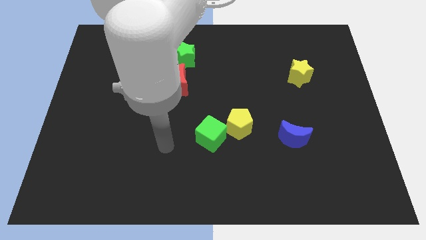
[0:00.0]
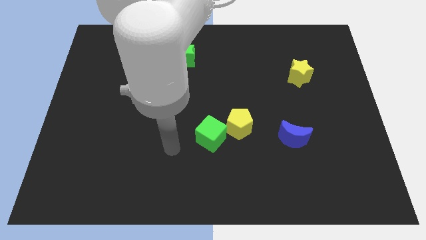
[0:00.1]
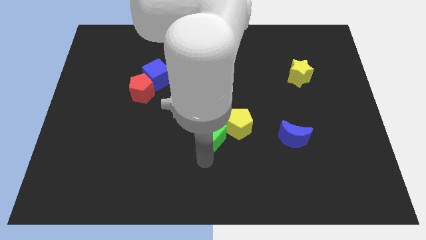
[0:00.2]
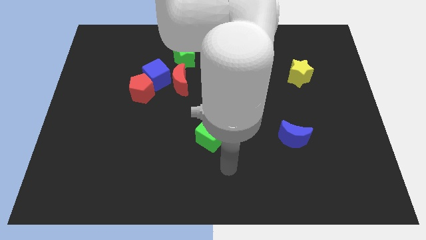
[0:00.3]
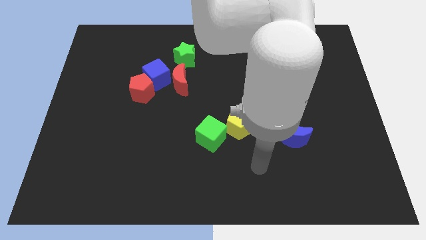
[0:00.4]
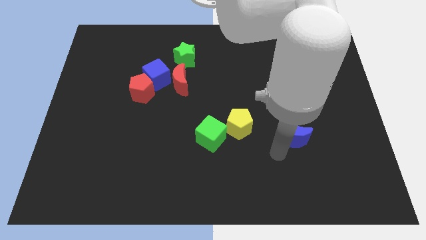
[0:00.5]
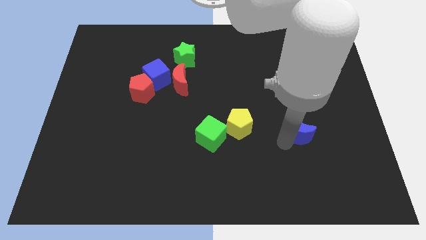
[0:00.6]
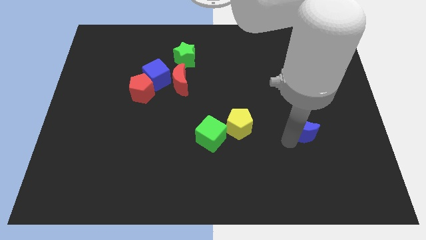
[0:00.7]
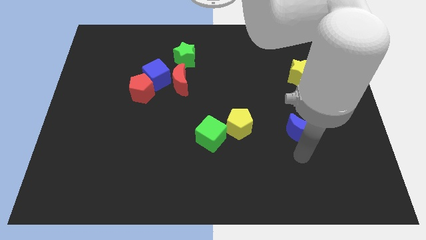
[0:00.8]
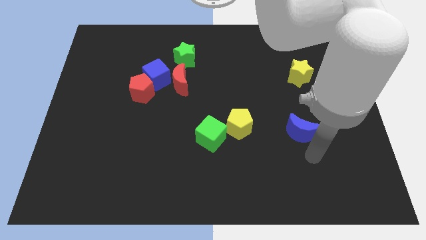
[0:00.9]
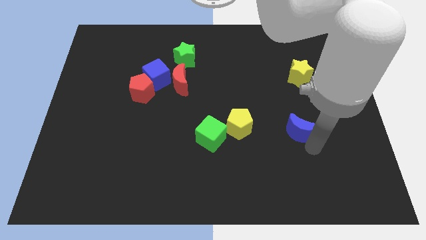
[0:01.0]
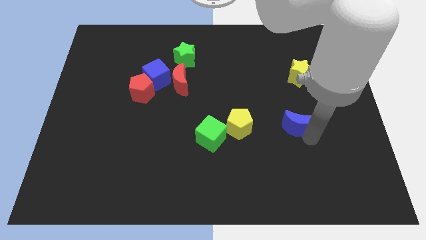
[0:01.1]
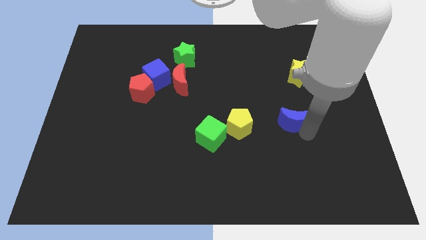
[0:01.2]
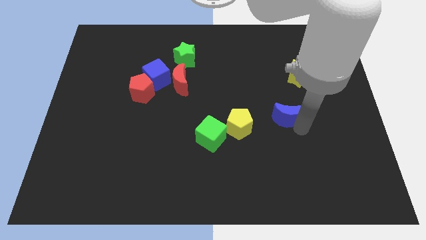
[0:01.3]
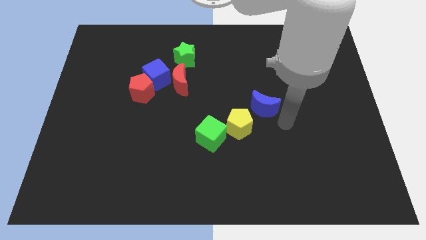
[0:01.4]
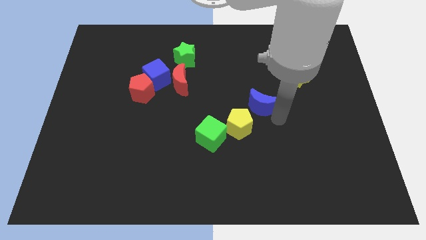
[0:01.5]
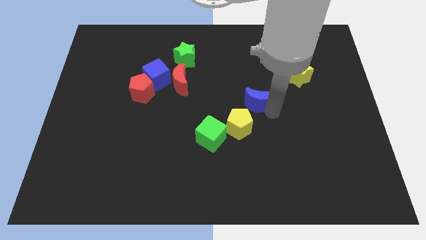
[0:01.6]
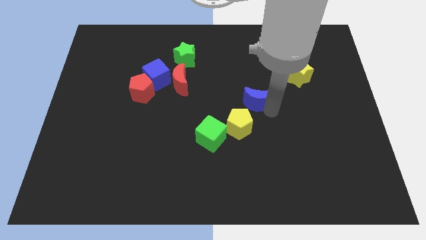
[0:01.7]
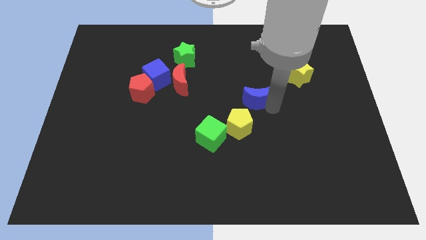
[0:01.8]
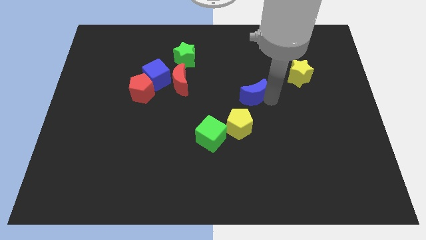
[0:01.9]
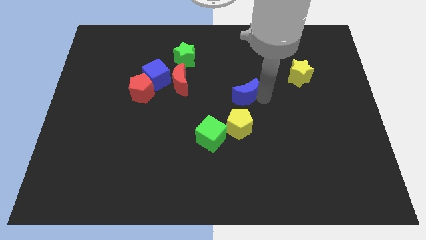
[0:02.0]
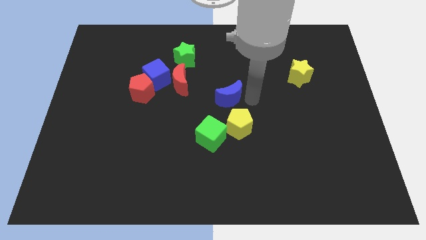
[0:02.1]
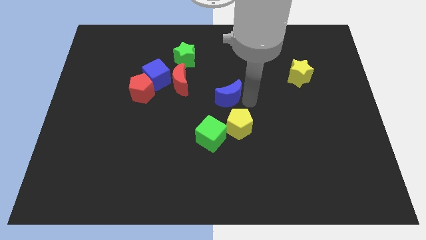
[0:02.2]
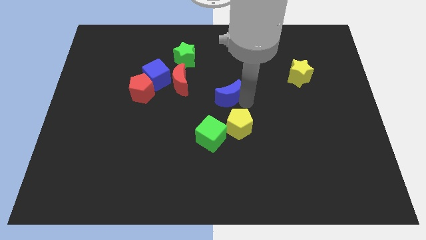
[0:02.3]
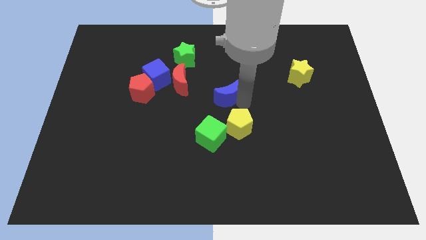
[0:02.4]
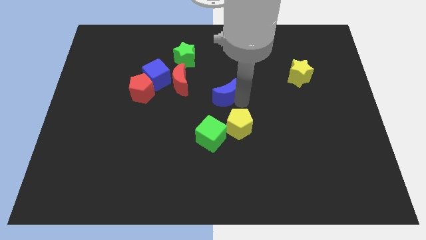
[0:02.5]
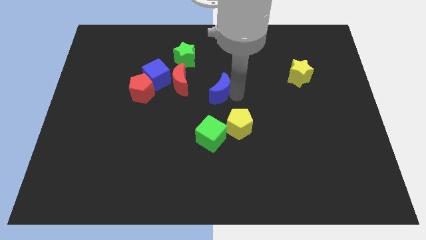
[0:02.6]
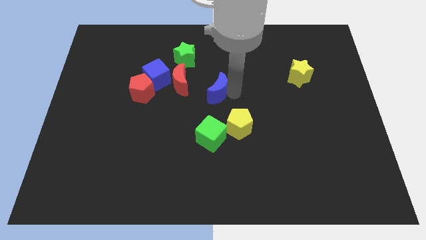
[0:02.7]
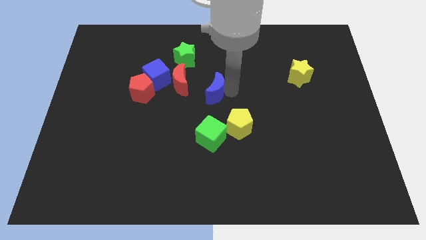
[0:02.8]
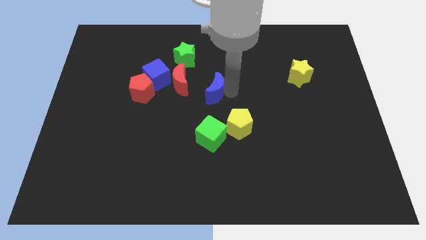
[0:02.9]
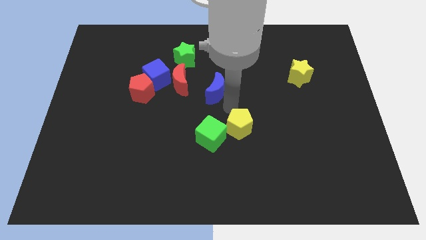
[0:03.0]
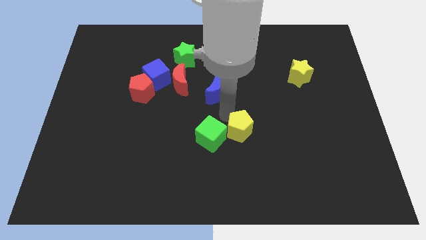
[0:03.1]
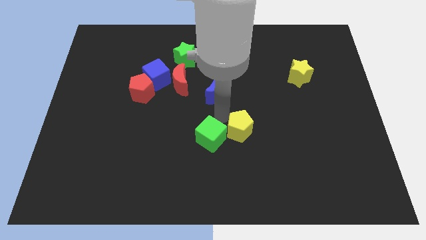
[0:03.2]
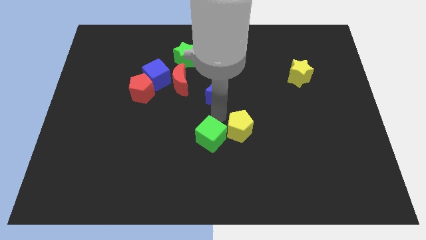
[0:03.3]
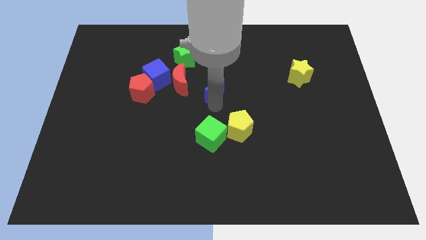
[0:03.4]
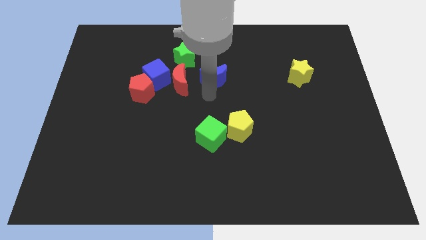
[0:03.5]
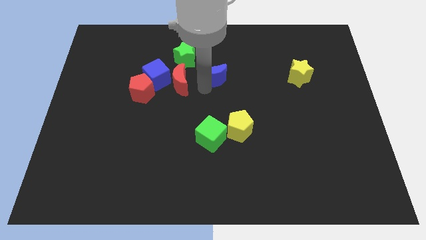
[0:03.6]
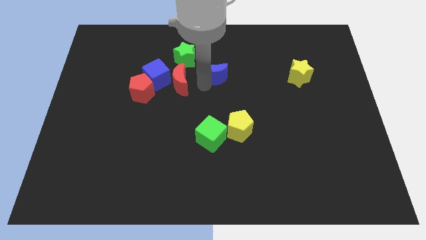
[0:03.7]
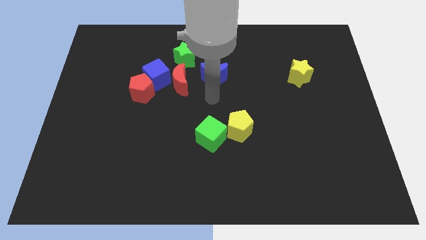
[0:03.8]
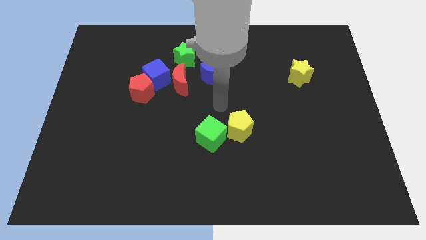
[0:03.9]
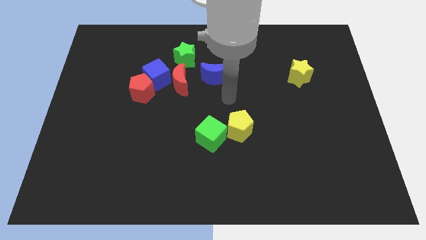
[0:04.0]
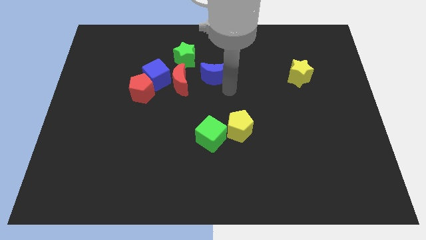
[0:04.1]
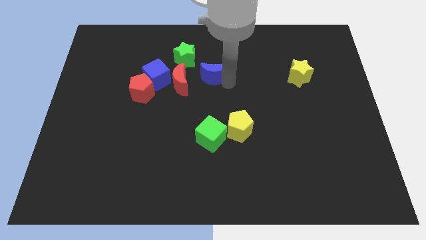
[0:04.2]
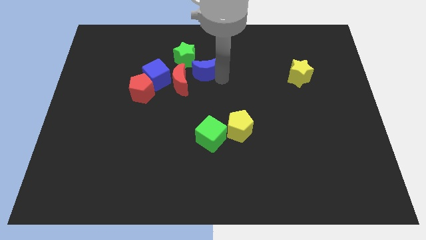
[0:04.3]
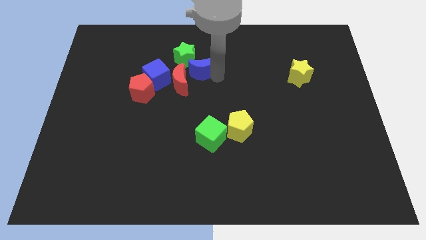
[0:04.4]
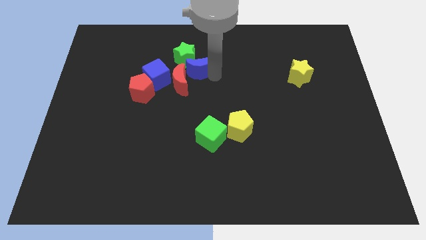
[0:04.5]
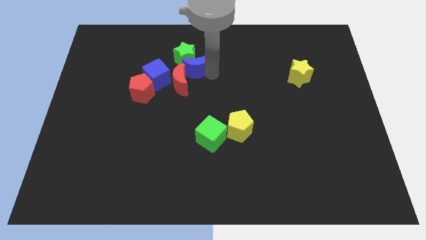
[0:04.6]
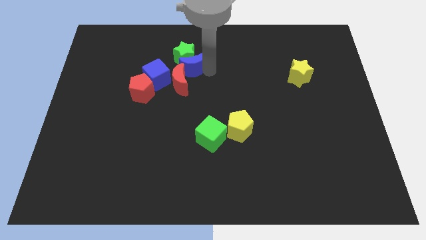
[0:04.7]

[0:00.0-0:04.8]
push the blue moon next to the green star

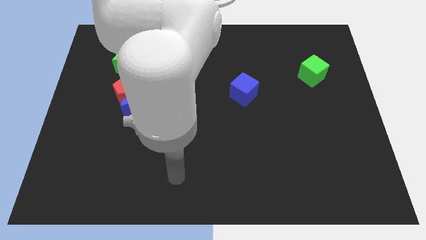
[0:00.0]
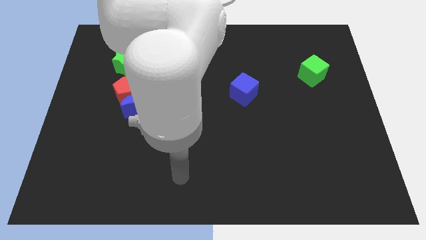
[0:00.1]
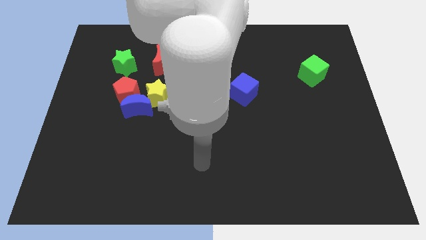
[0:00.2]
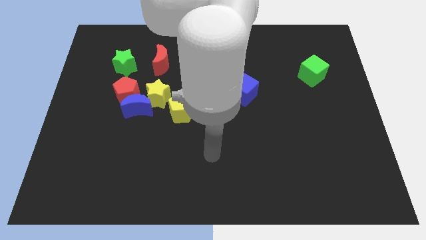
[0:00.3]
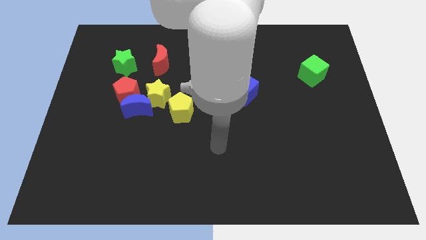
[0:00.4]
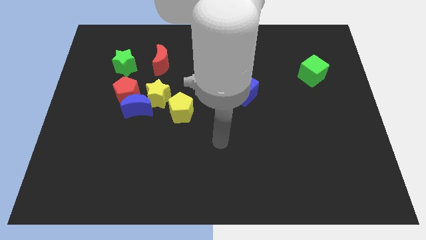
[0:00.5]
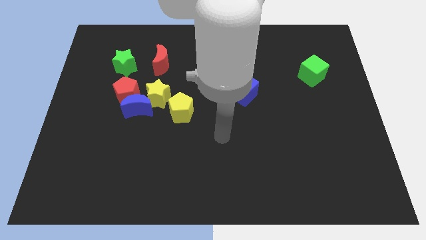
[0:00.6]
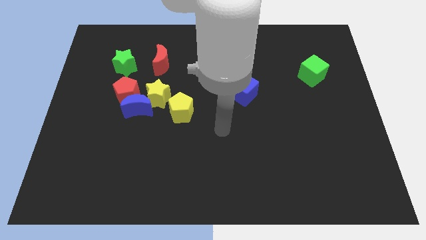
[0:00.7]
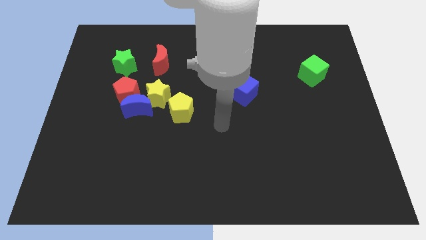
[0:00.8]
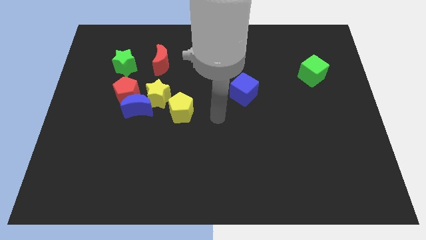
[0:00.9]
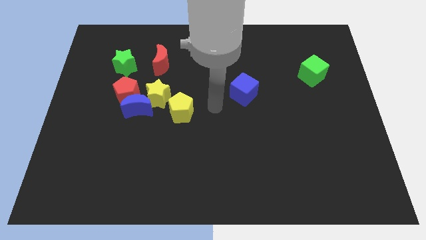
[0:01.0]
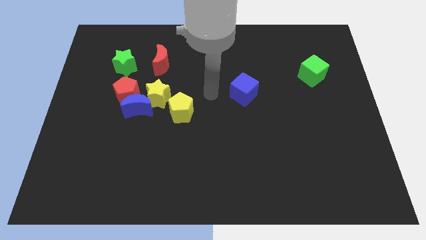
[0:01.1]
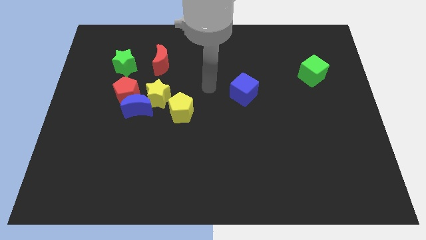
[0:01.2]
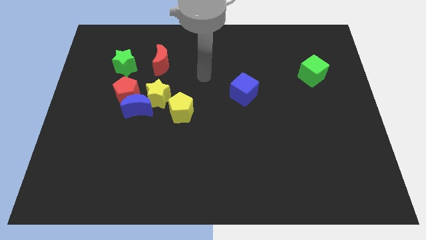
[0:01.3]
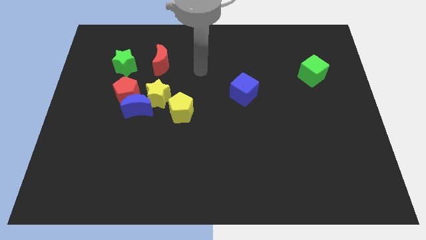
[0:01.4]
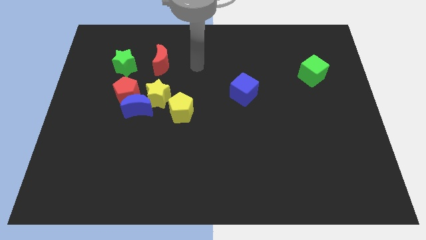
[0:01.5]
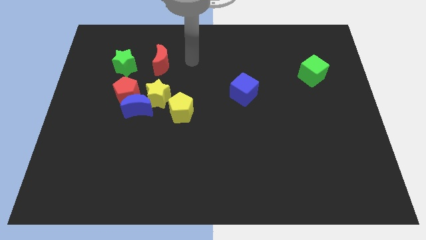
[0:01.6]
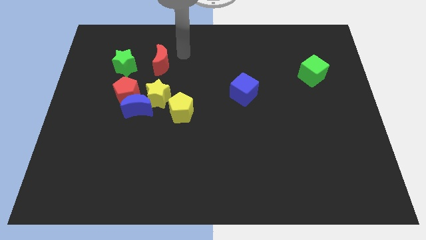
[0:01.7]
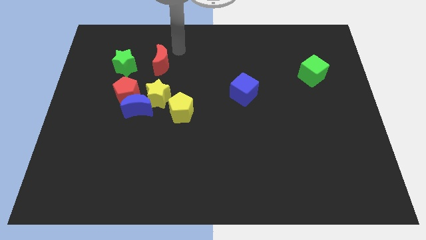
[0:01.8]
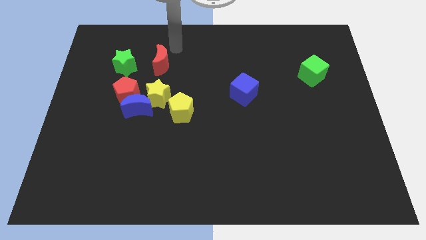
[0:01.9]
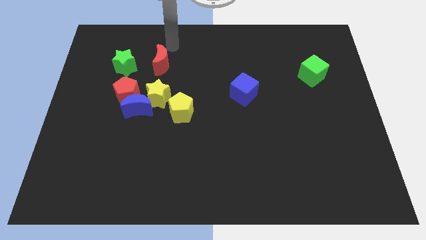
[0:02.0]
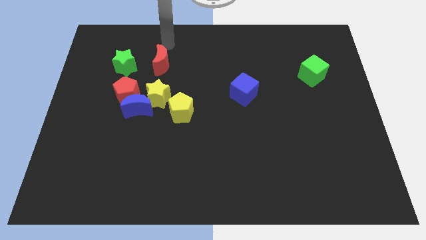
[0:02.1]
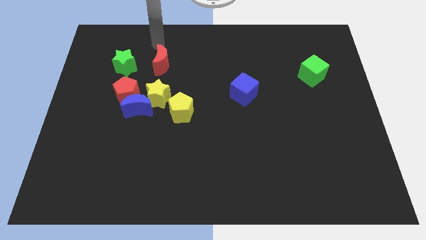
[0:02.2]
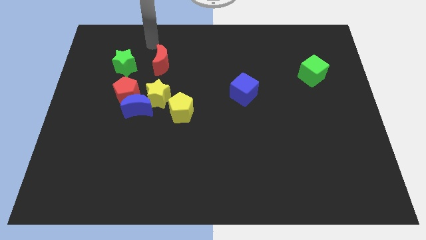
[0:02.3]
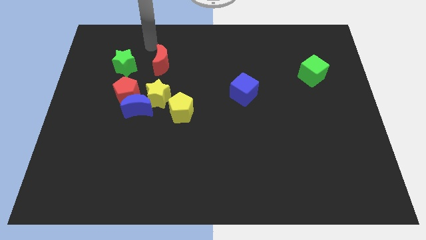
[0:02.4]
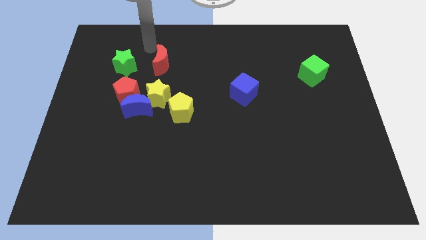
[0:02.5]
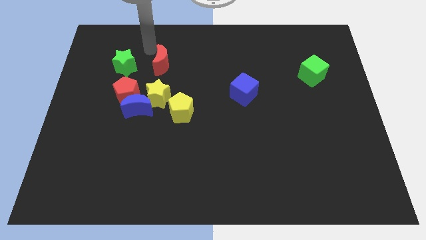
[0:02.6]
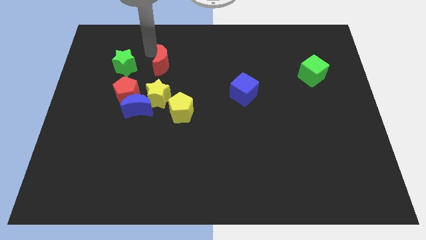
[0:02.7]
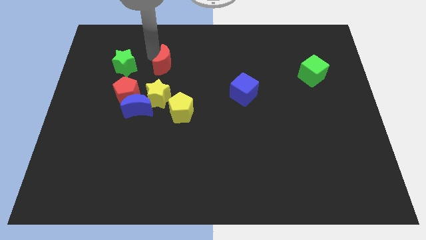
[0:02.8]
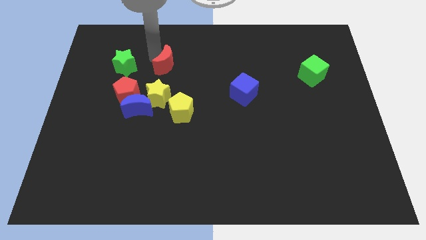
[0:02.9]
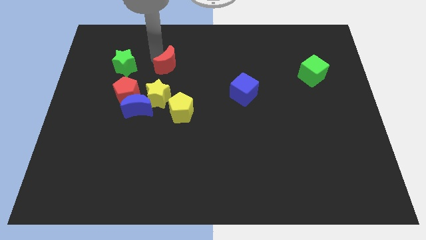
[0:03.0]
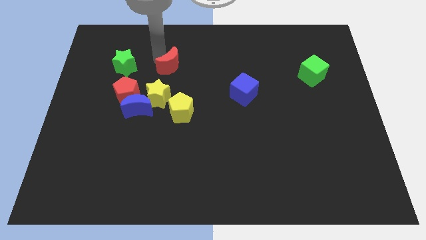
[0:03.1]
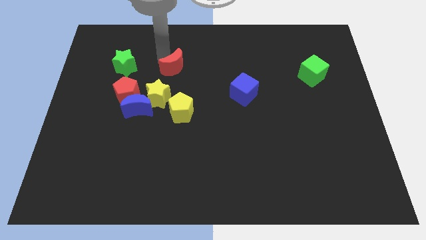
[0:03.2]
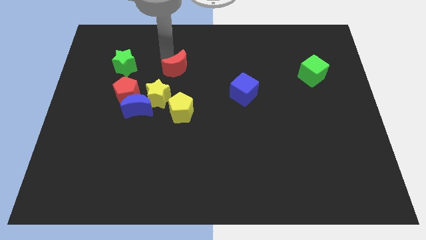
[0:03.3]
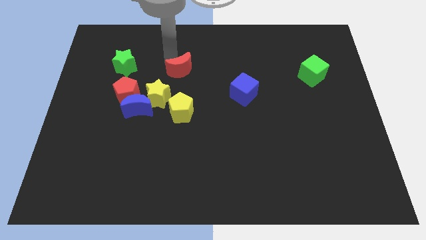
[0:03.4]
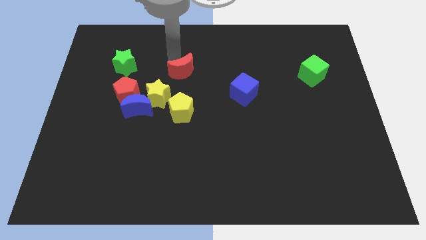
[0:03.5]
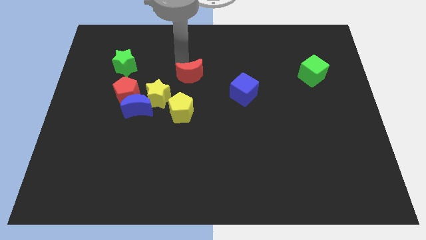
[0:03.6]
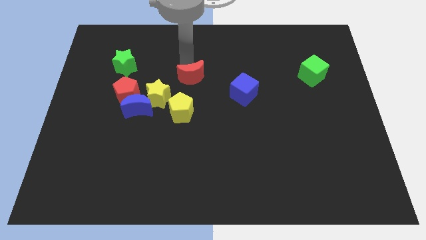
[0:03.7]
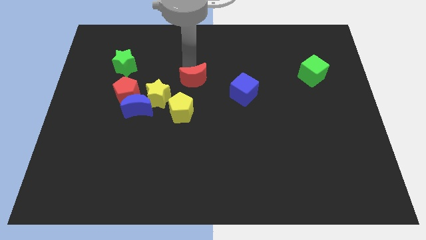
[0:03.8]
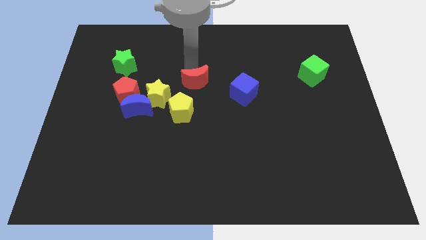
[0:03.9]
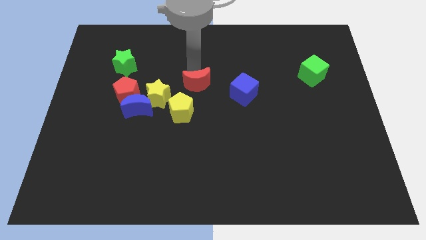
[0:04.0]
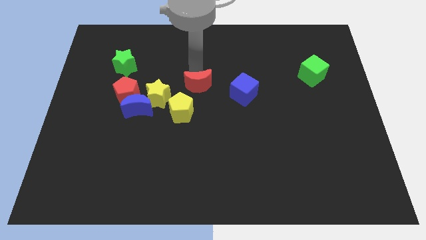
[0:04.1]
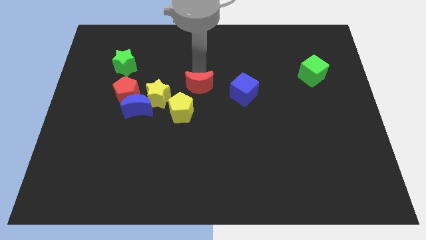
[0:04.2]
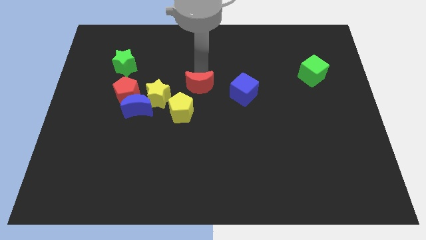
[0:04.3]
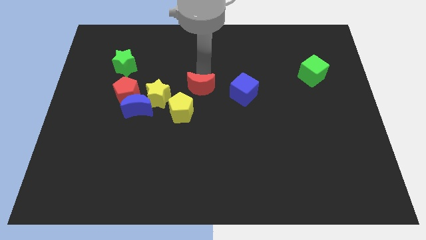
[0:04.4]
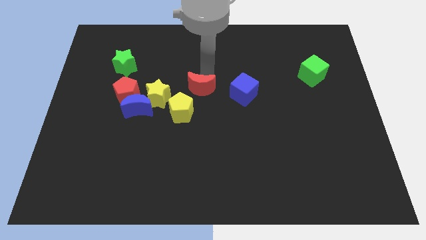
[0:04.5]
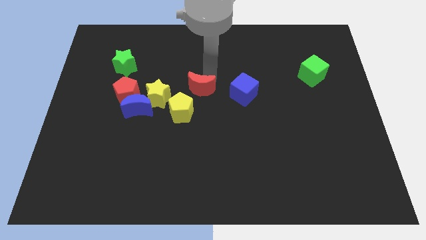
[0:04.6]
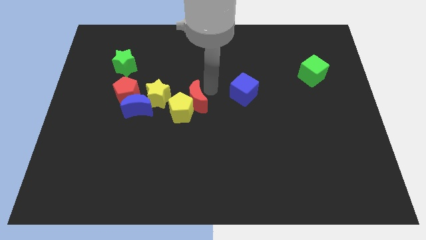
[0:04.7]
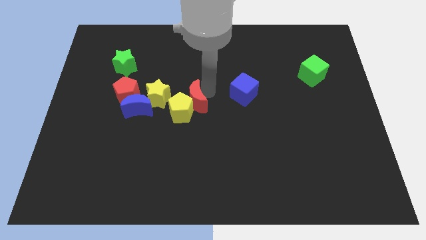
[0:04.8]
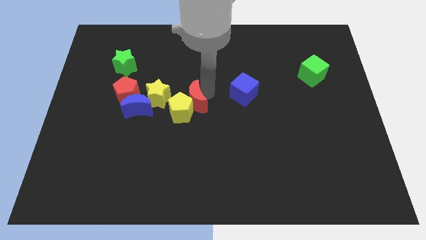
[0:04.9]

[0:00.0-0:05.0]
move the red moon towards the yellow pentagon
